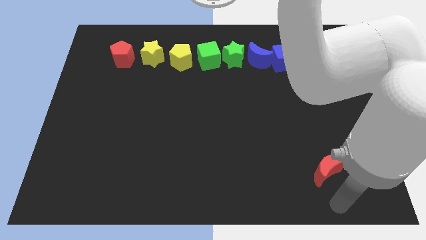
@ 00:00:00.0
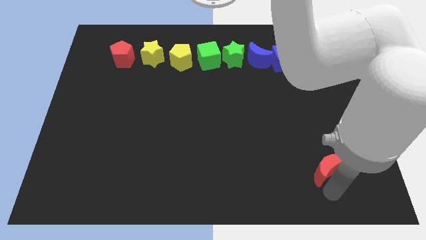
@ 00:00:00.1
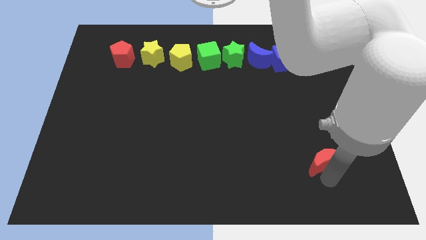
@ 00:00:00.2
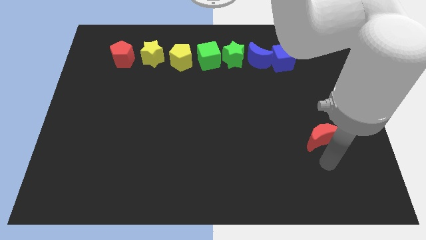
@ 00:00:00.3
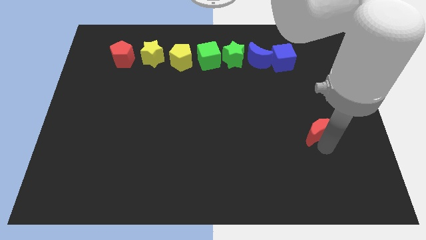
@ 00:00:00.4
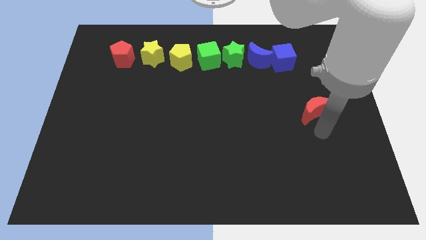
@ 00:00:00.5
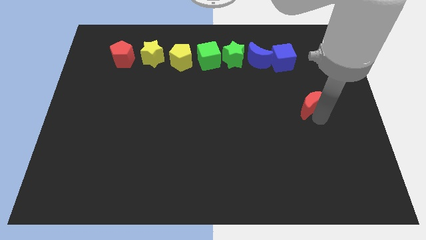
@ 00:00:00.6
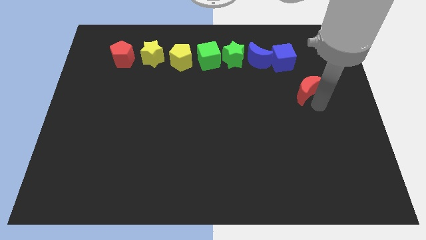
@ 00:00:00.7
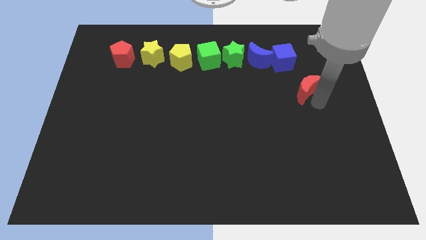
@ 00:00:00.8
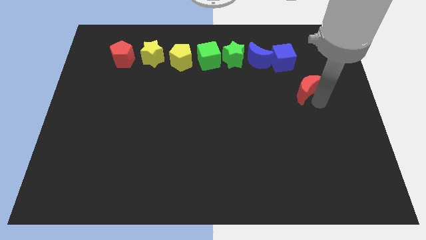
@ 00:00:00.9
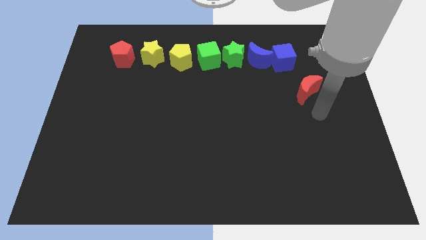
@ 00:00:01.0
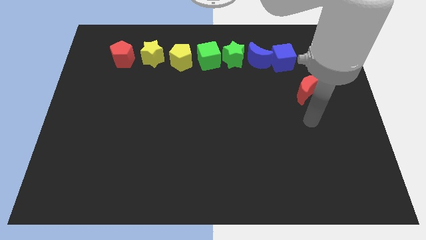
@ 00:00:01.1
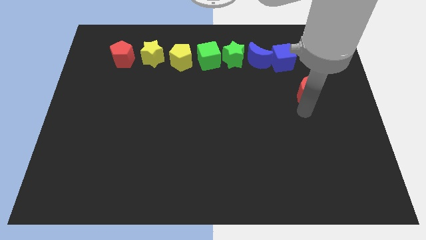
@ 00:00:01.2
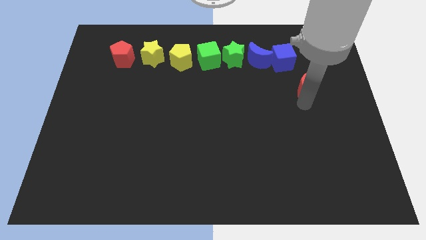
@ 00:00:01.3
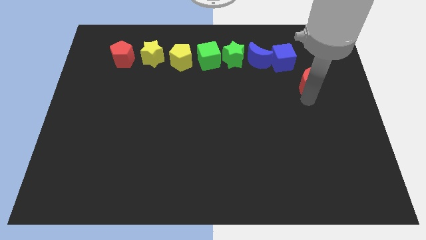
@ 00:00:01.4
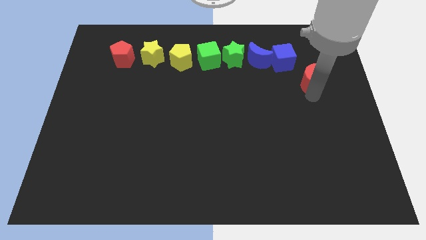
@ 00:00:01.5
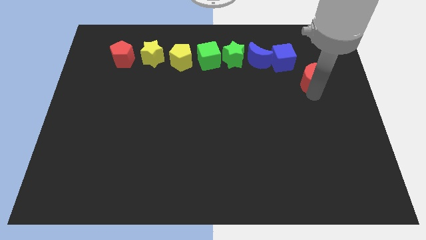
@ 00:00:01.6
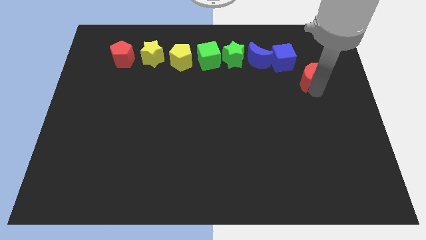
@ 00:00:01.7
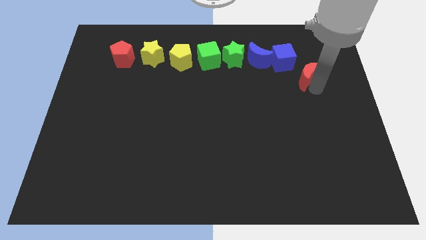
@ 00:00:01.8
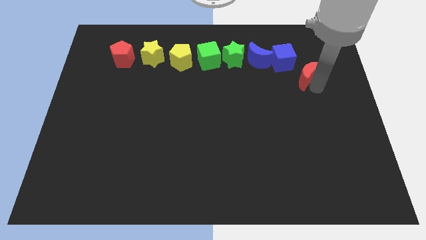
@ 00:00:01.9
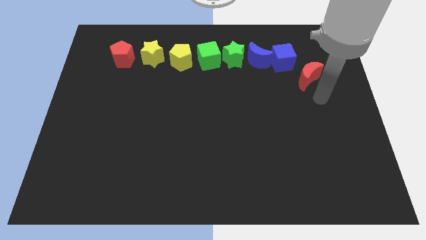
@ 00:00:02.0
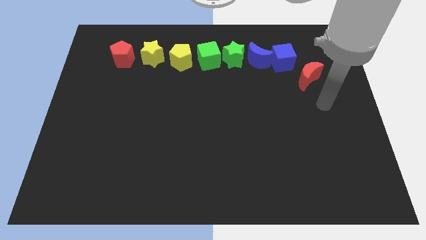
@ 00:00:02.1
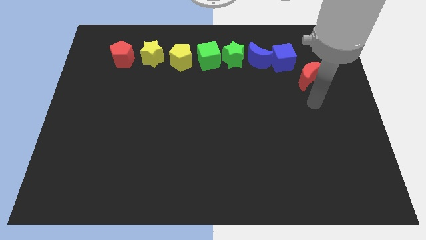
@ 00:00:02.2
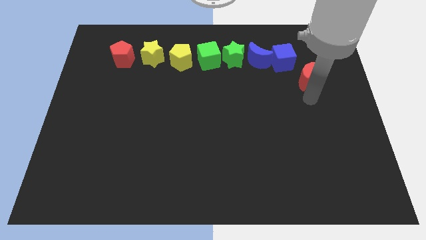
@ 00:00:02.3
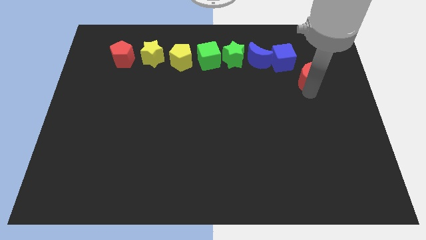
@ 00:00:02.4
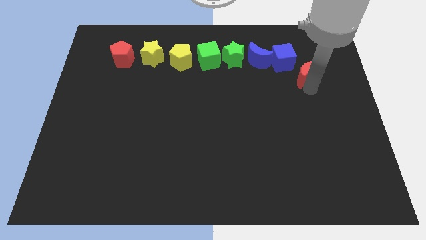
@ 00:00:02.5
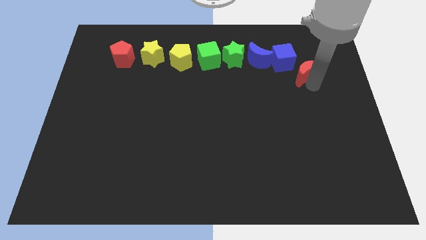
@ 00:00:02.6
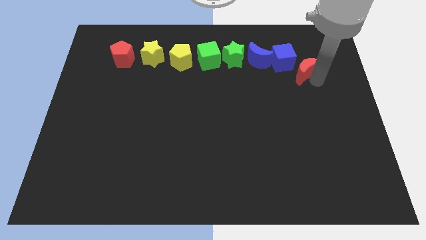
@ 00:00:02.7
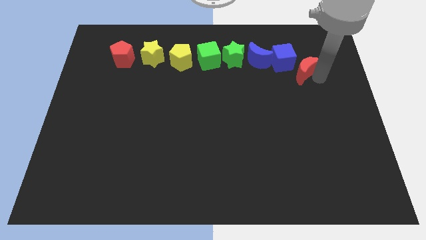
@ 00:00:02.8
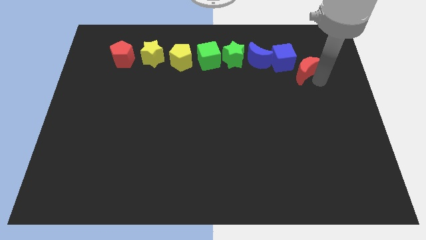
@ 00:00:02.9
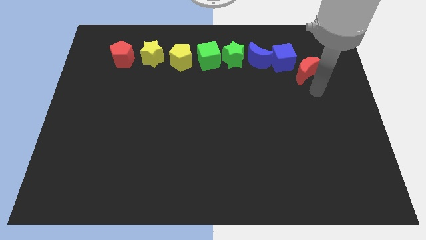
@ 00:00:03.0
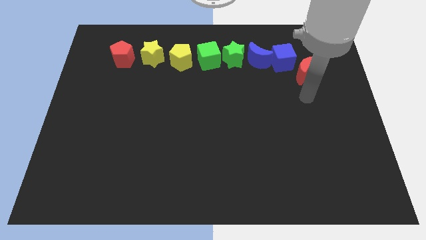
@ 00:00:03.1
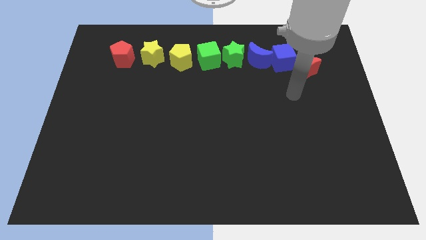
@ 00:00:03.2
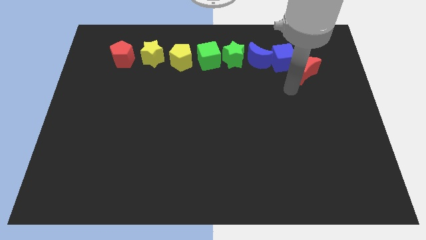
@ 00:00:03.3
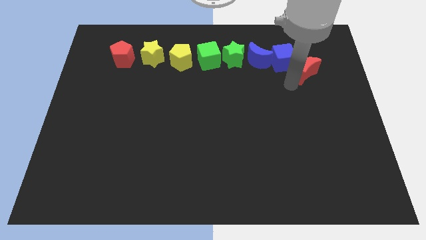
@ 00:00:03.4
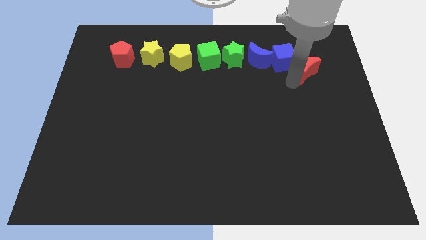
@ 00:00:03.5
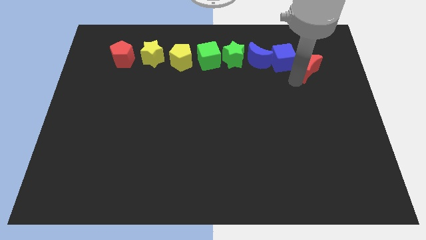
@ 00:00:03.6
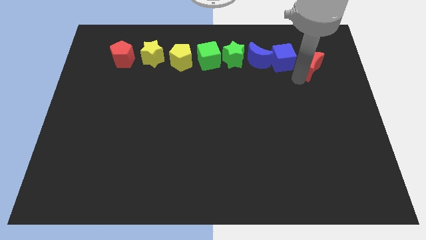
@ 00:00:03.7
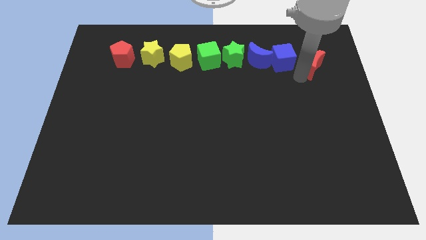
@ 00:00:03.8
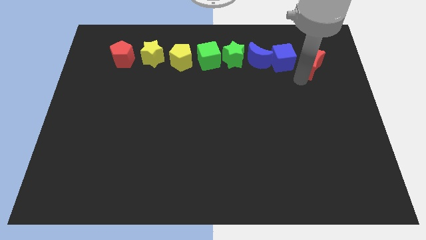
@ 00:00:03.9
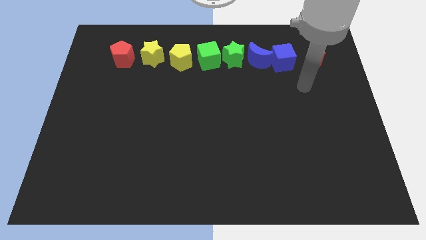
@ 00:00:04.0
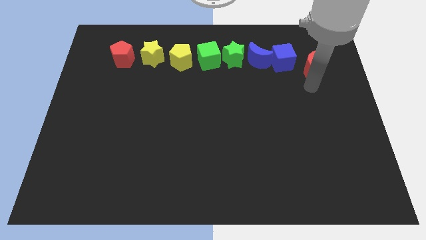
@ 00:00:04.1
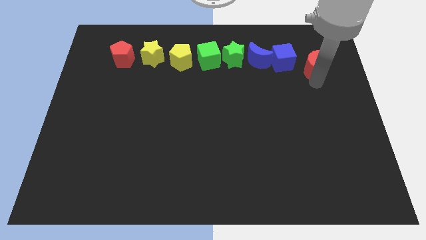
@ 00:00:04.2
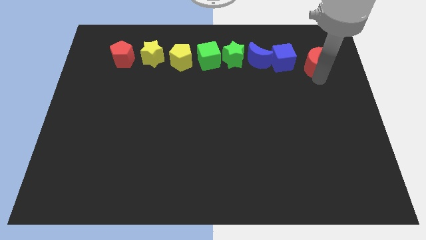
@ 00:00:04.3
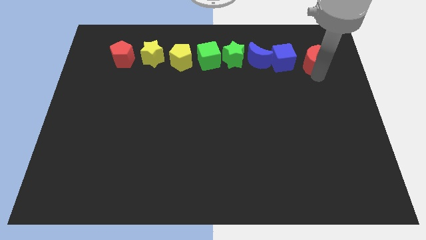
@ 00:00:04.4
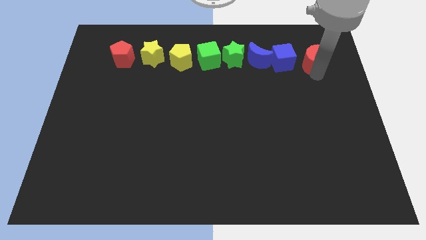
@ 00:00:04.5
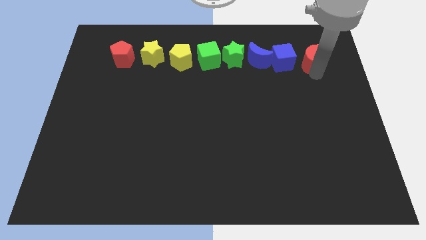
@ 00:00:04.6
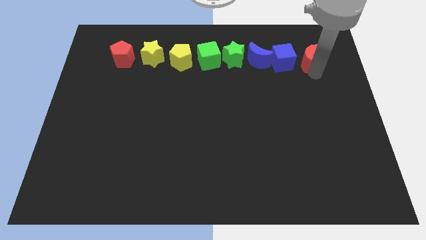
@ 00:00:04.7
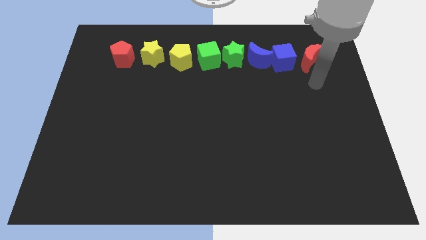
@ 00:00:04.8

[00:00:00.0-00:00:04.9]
push the red moon to the right of the blue cube

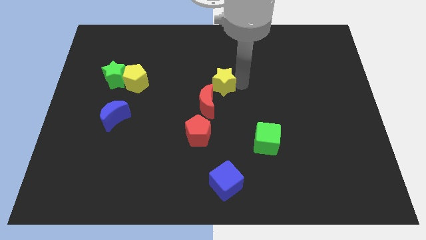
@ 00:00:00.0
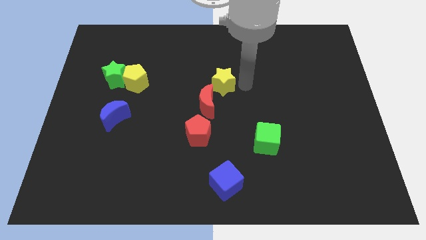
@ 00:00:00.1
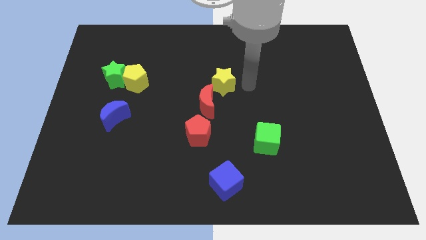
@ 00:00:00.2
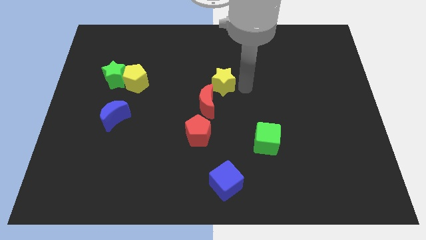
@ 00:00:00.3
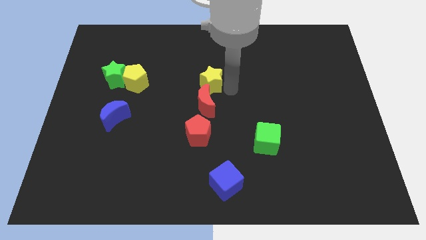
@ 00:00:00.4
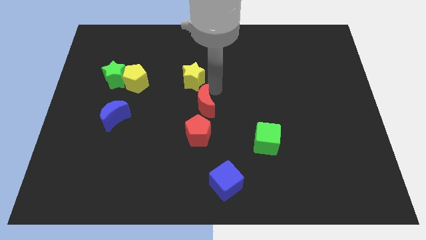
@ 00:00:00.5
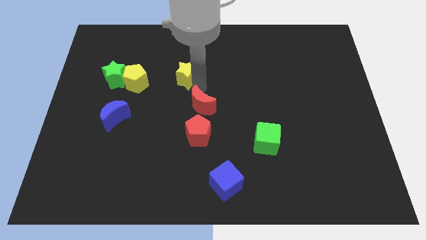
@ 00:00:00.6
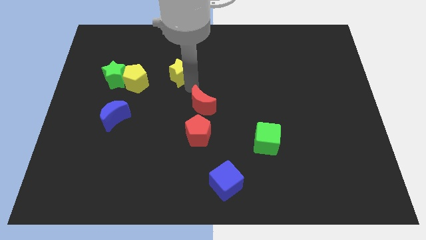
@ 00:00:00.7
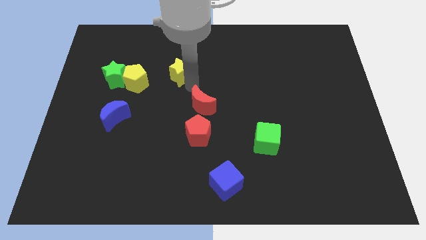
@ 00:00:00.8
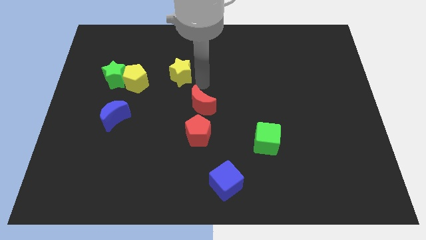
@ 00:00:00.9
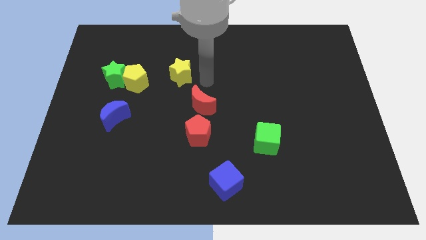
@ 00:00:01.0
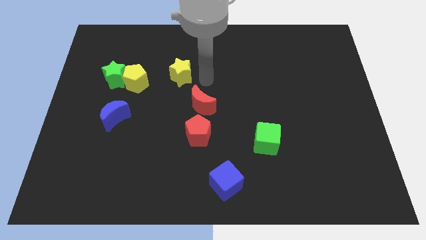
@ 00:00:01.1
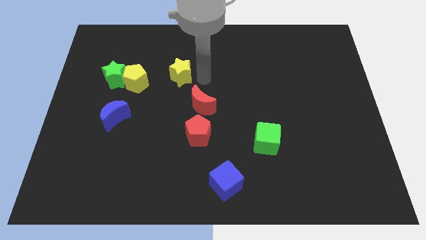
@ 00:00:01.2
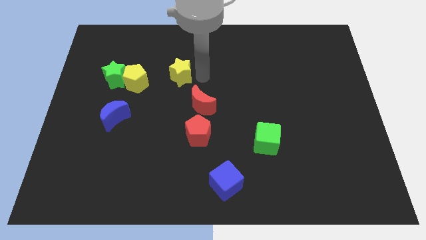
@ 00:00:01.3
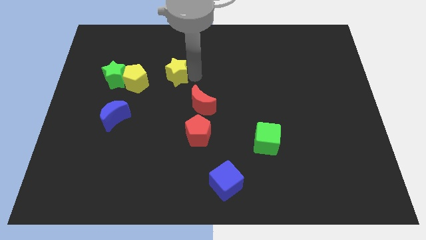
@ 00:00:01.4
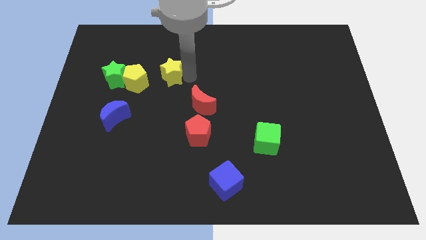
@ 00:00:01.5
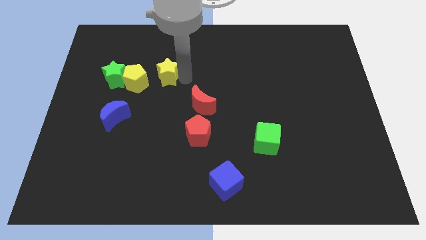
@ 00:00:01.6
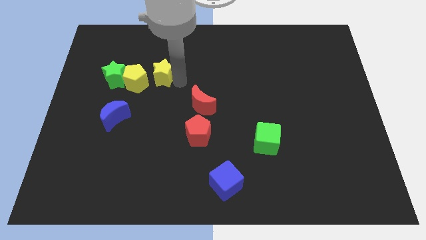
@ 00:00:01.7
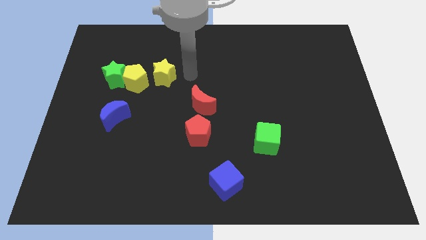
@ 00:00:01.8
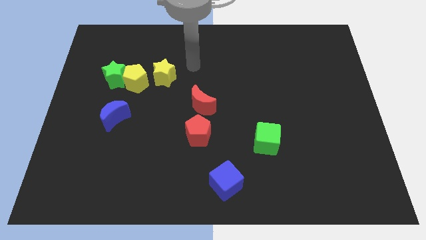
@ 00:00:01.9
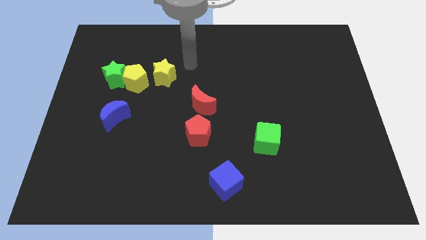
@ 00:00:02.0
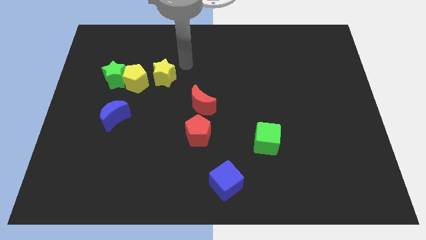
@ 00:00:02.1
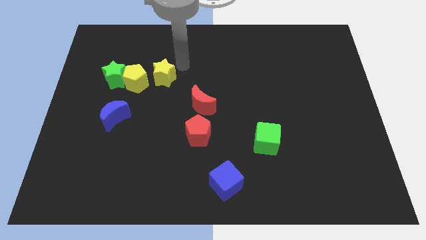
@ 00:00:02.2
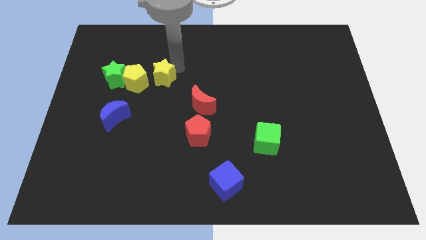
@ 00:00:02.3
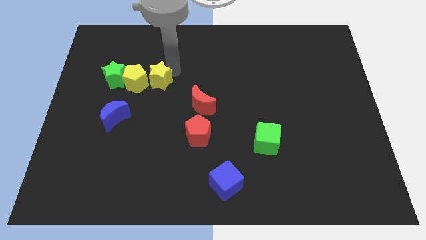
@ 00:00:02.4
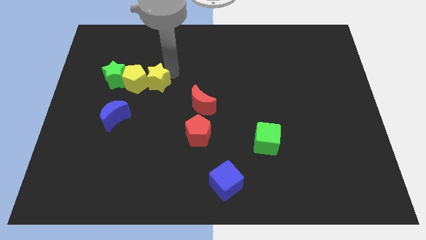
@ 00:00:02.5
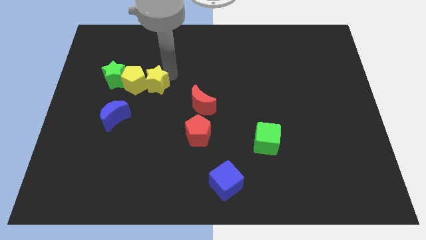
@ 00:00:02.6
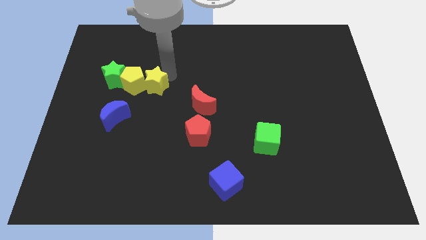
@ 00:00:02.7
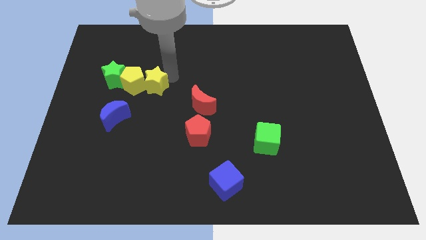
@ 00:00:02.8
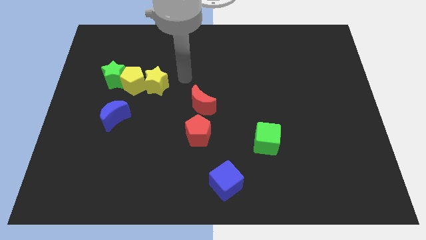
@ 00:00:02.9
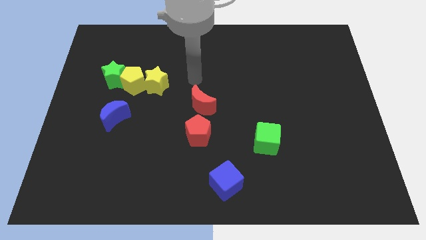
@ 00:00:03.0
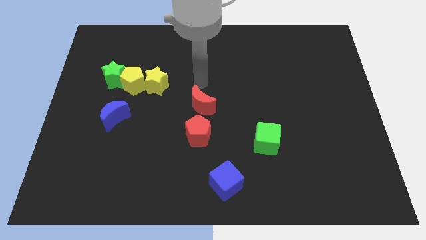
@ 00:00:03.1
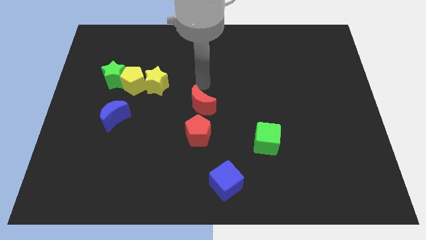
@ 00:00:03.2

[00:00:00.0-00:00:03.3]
drag the yellow star to the right side of the yellow pentagon

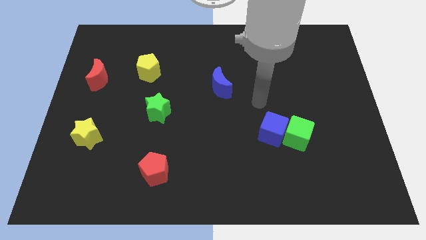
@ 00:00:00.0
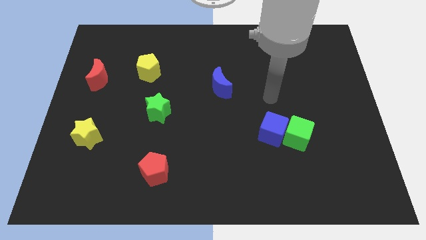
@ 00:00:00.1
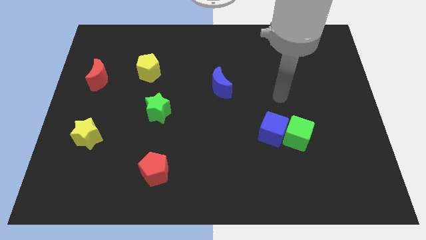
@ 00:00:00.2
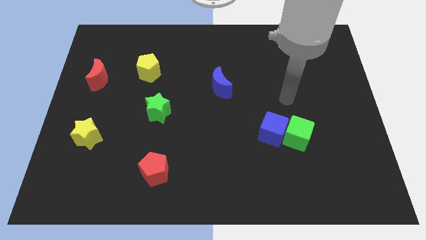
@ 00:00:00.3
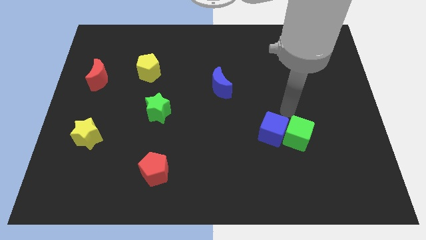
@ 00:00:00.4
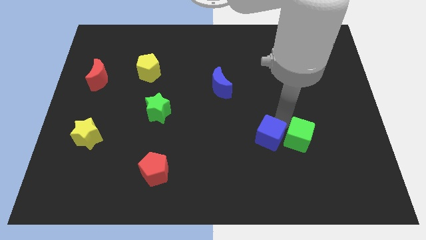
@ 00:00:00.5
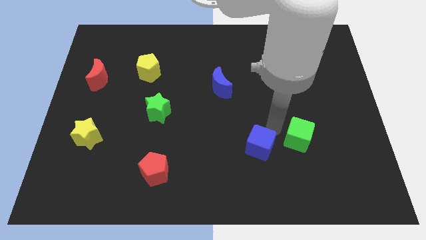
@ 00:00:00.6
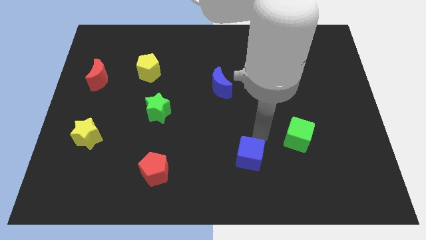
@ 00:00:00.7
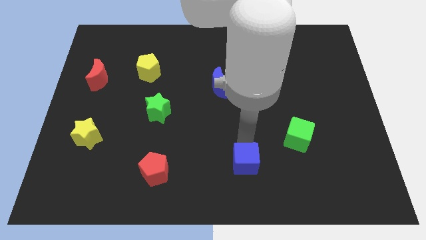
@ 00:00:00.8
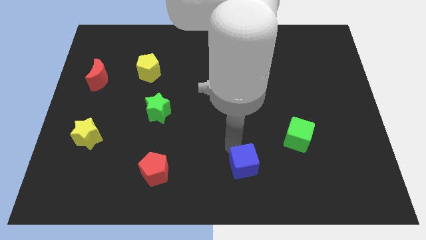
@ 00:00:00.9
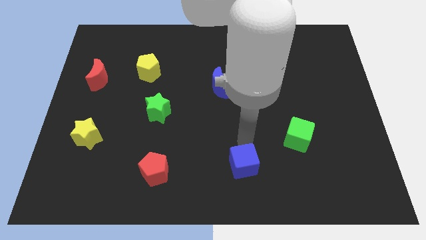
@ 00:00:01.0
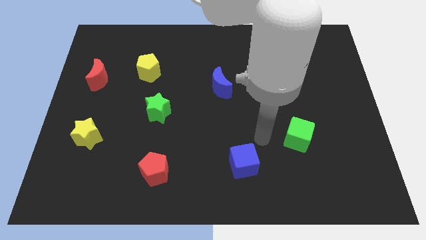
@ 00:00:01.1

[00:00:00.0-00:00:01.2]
place the blue cube in between the red pentagon and green cube
